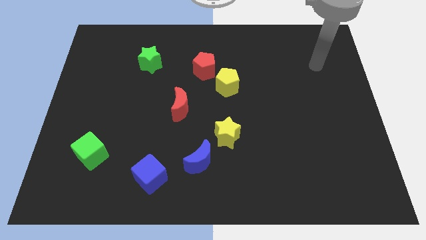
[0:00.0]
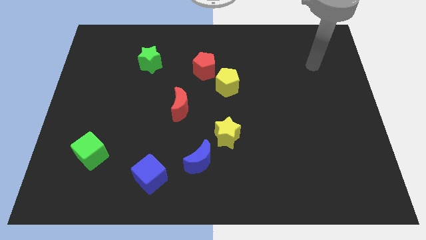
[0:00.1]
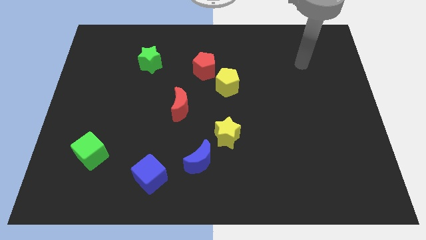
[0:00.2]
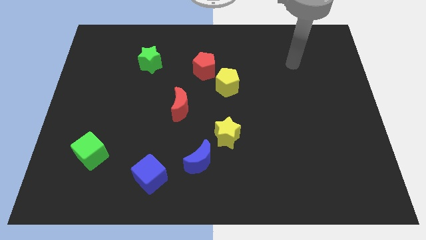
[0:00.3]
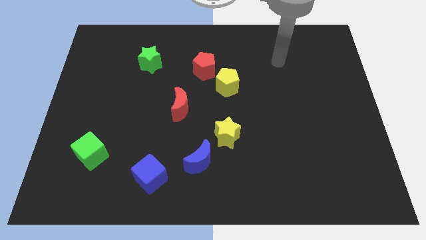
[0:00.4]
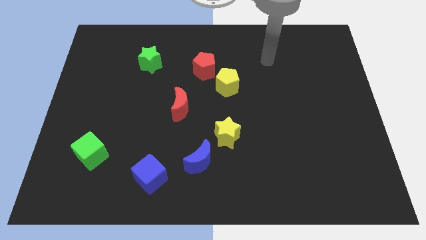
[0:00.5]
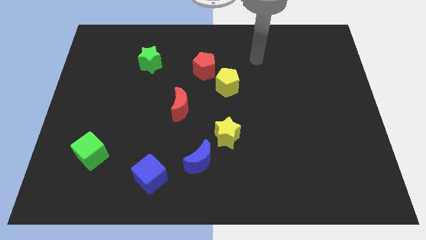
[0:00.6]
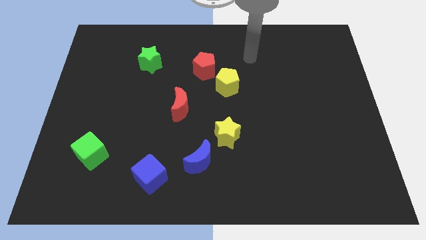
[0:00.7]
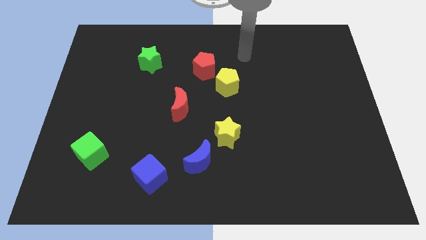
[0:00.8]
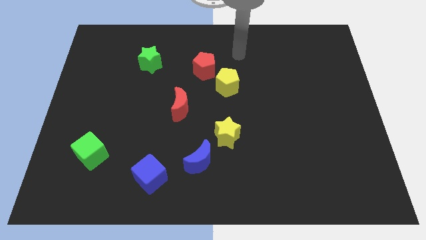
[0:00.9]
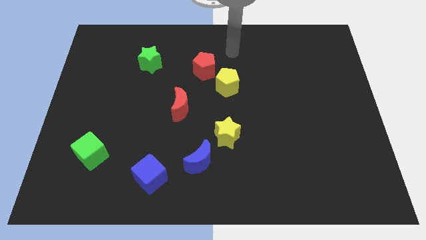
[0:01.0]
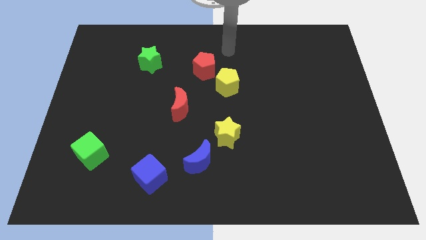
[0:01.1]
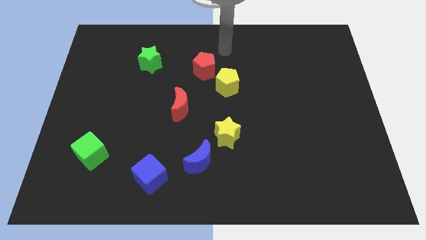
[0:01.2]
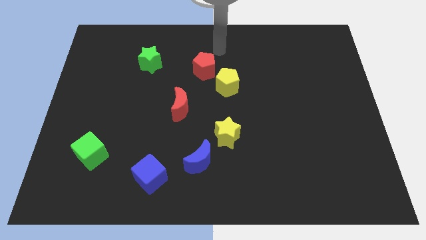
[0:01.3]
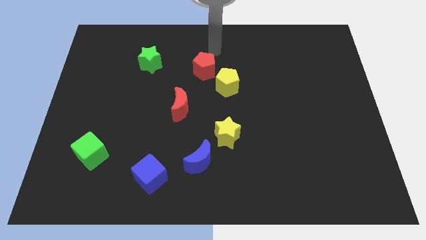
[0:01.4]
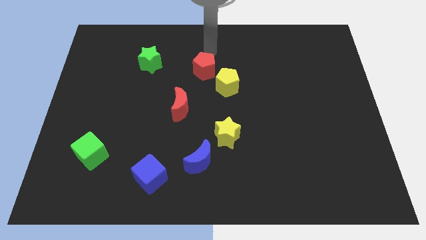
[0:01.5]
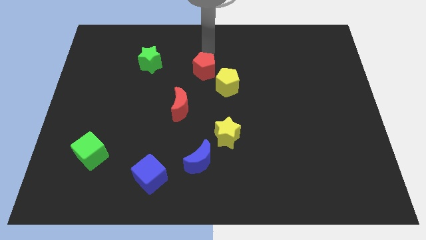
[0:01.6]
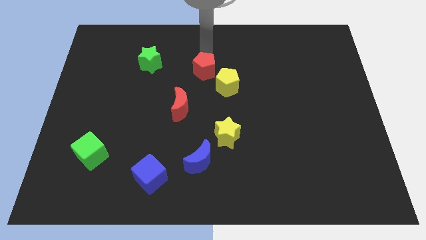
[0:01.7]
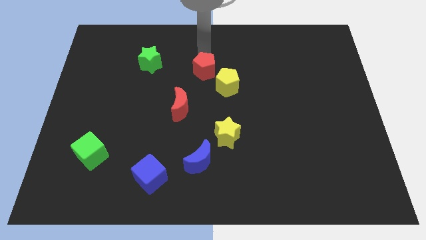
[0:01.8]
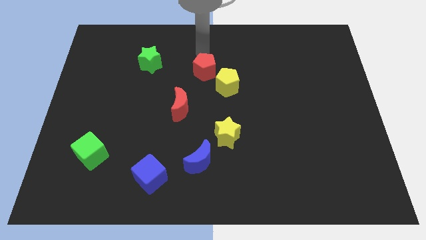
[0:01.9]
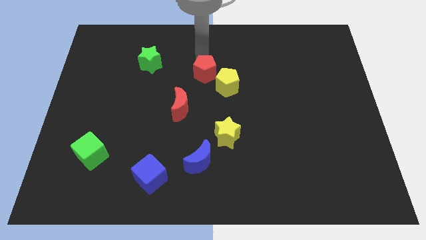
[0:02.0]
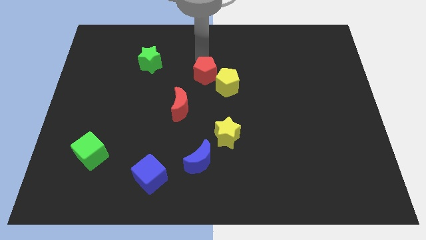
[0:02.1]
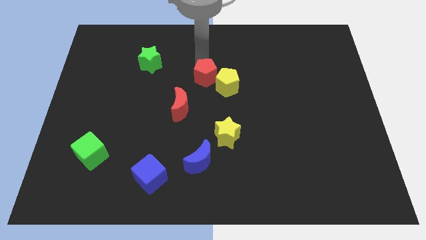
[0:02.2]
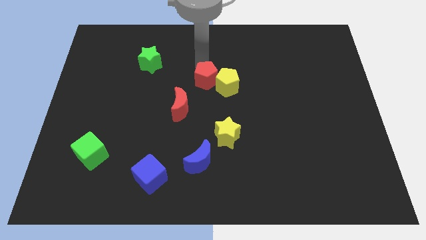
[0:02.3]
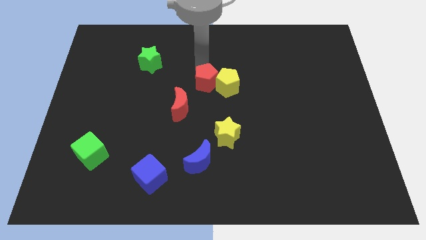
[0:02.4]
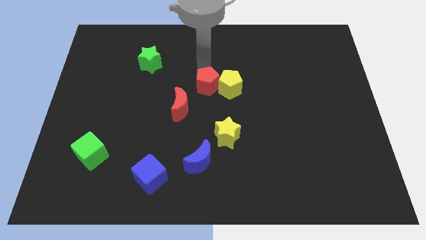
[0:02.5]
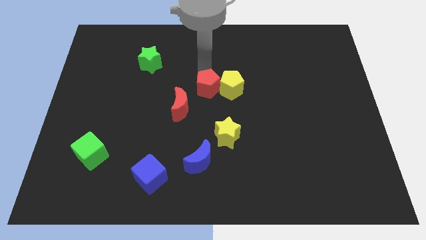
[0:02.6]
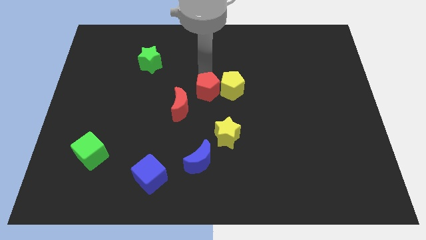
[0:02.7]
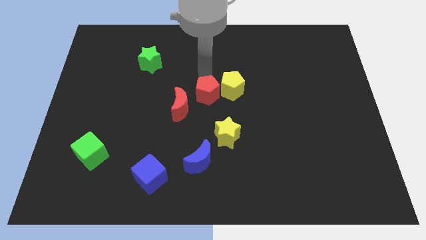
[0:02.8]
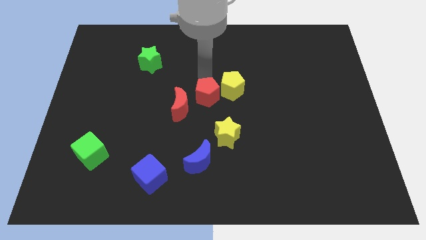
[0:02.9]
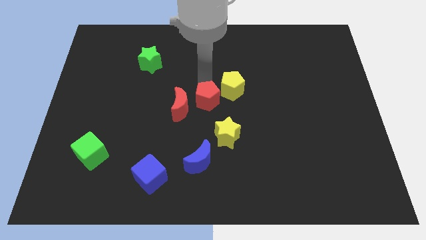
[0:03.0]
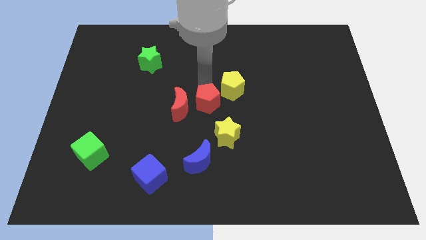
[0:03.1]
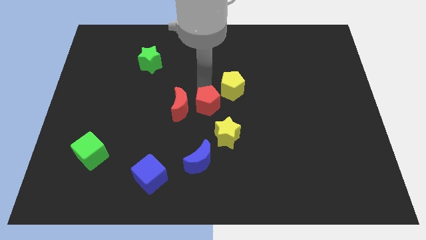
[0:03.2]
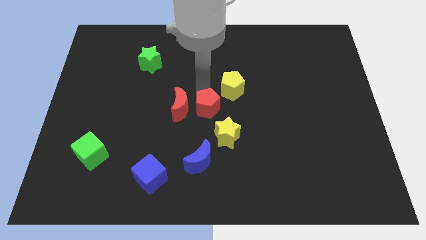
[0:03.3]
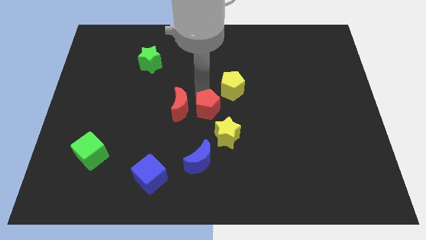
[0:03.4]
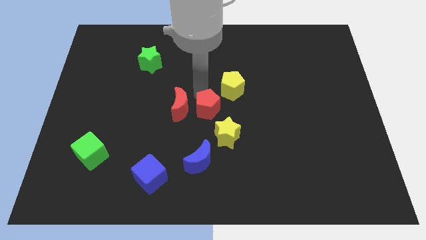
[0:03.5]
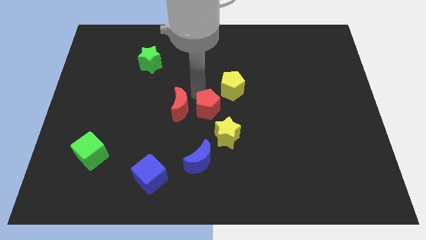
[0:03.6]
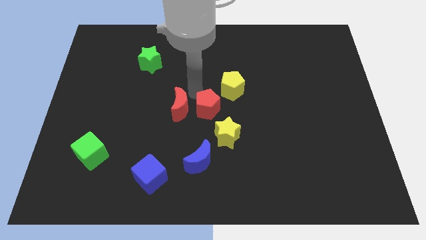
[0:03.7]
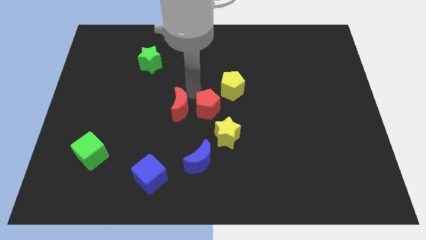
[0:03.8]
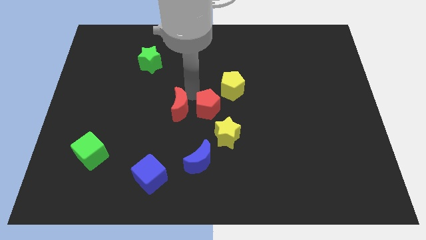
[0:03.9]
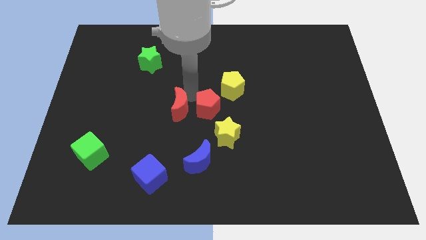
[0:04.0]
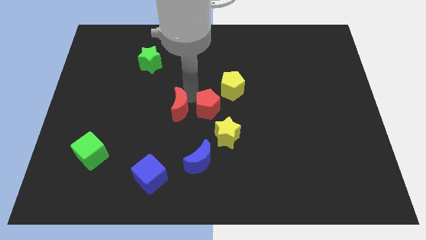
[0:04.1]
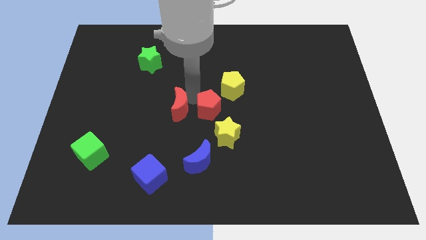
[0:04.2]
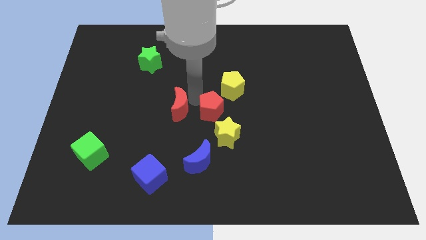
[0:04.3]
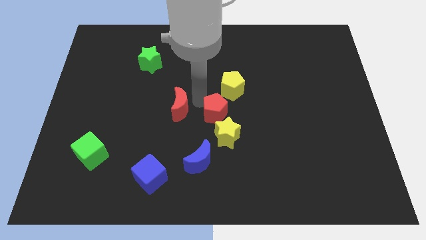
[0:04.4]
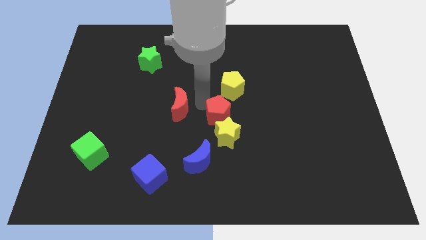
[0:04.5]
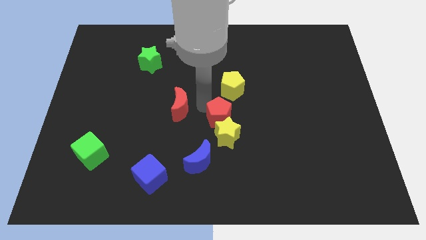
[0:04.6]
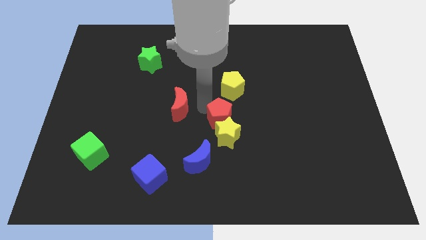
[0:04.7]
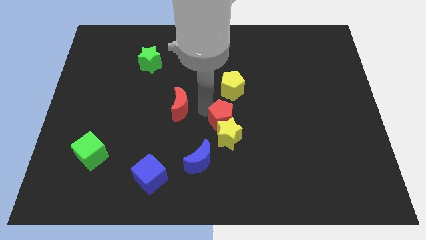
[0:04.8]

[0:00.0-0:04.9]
slide the red pentagon next to the yellow star

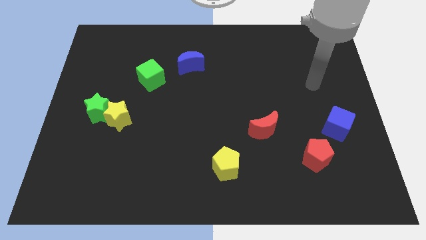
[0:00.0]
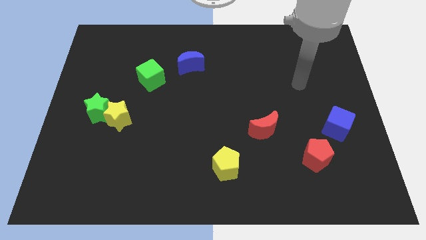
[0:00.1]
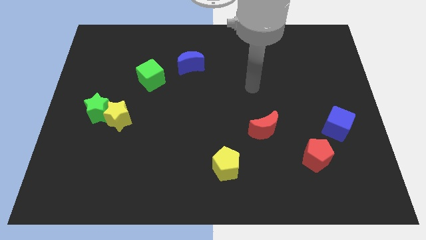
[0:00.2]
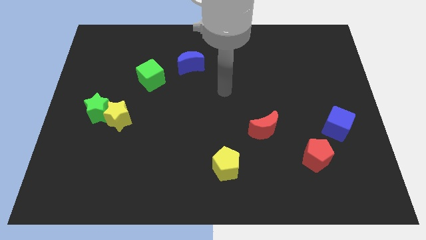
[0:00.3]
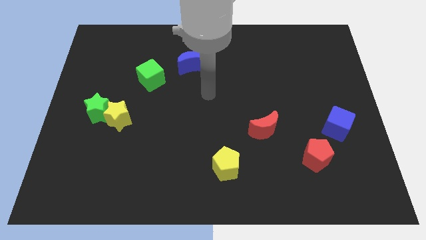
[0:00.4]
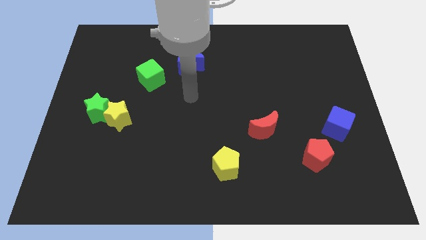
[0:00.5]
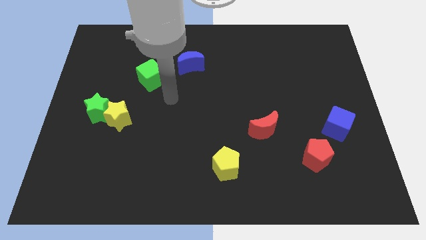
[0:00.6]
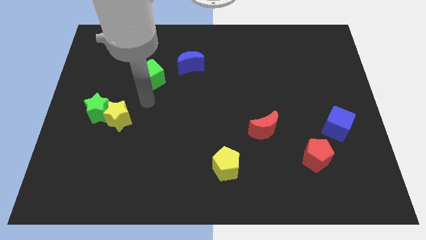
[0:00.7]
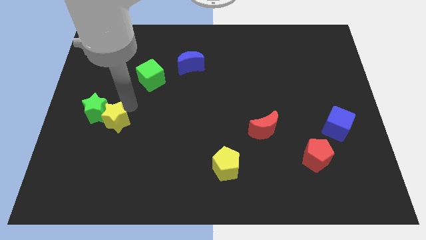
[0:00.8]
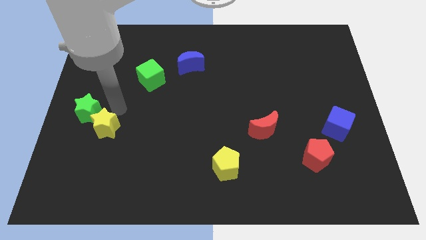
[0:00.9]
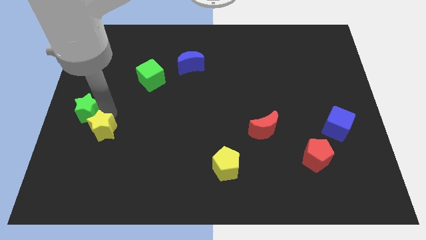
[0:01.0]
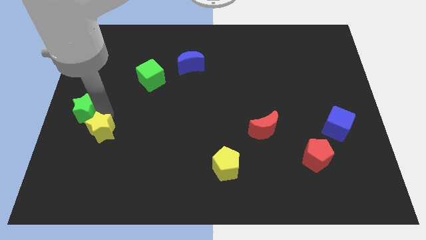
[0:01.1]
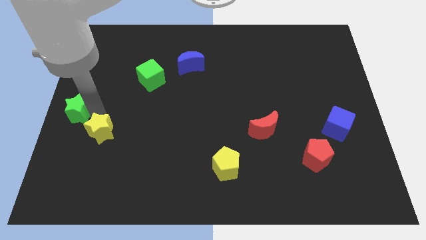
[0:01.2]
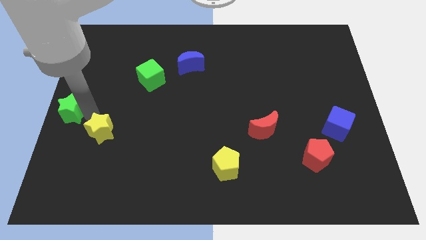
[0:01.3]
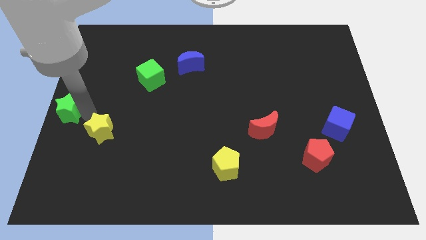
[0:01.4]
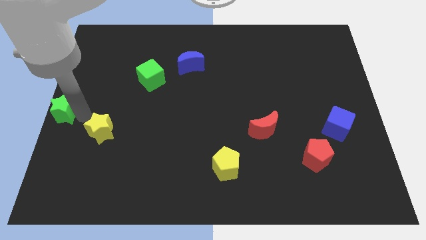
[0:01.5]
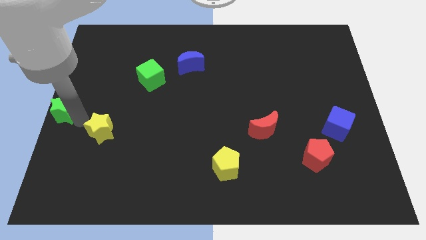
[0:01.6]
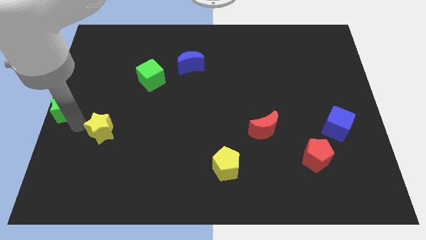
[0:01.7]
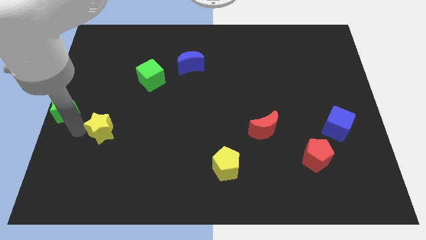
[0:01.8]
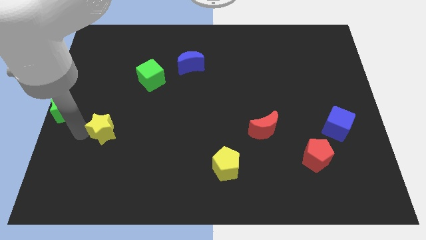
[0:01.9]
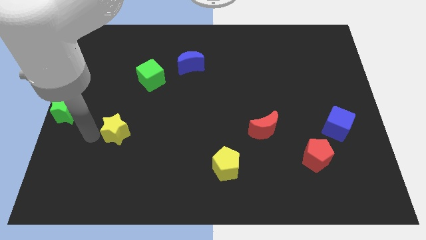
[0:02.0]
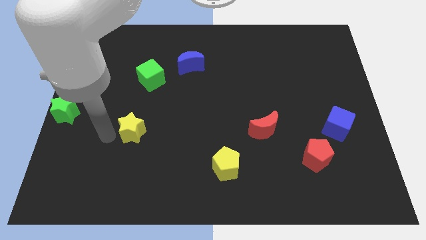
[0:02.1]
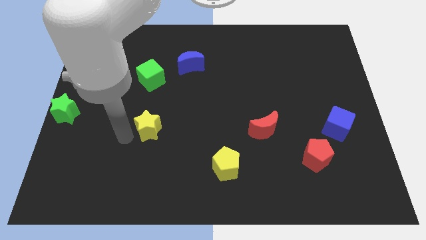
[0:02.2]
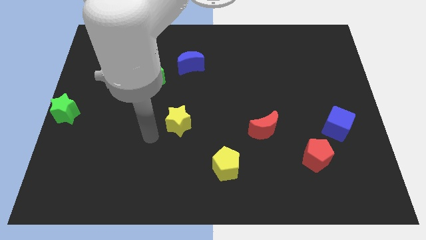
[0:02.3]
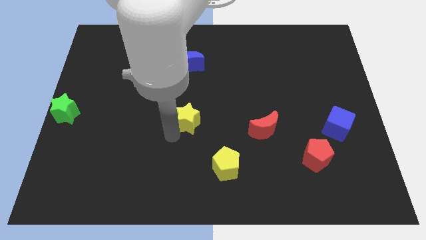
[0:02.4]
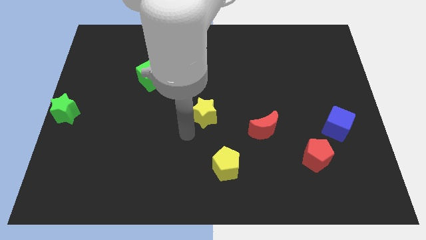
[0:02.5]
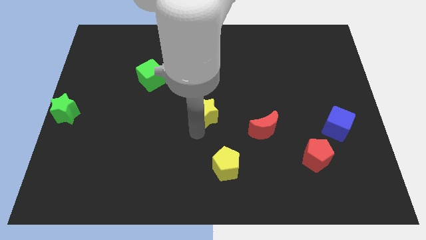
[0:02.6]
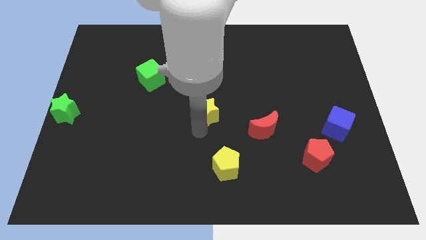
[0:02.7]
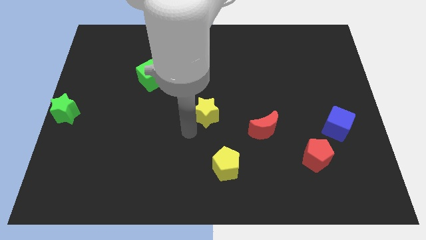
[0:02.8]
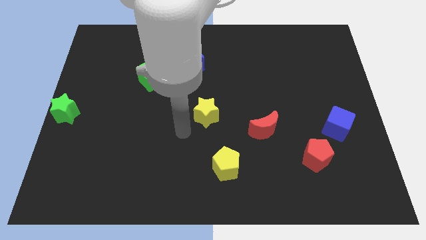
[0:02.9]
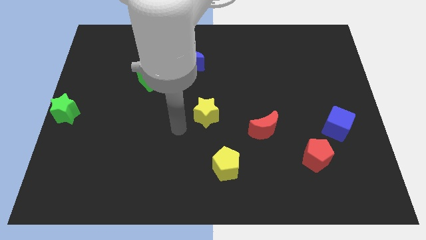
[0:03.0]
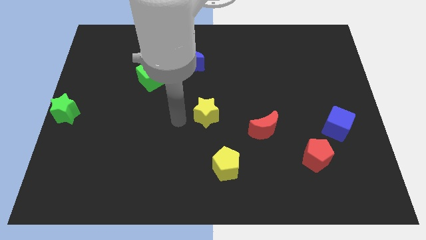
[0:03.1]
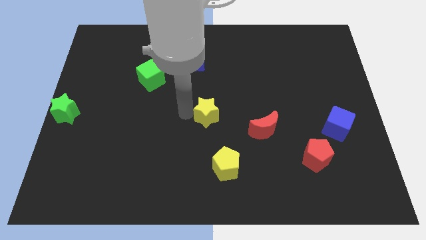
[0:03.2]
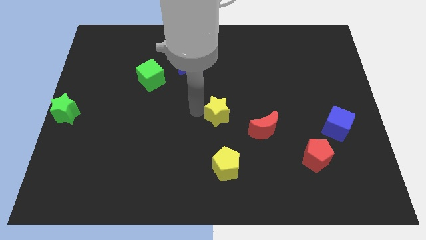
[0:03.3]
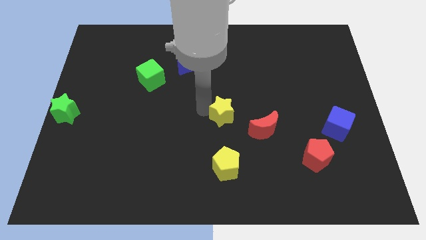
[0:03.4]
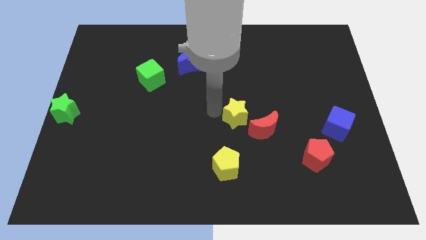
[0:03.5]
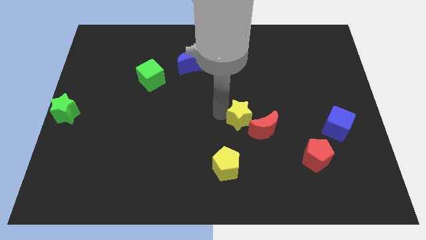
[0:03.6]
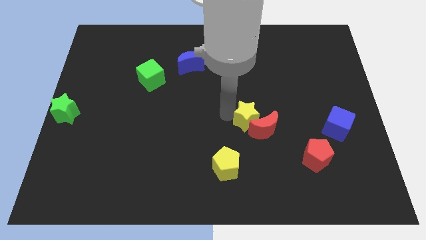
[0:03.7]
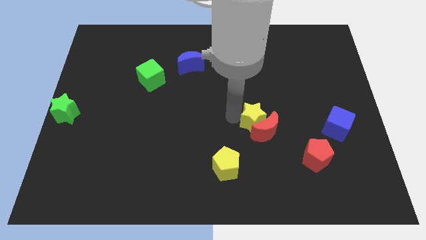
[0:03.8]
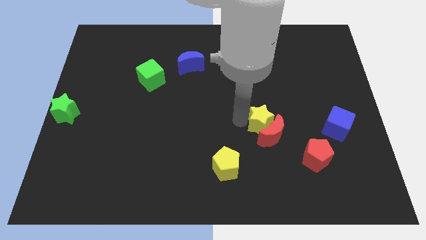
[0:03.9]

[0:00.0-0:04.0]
put the yellow star next to the red moon
